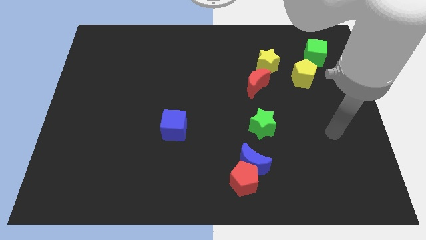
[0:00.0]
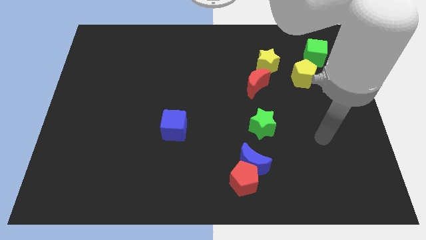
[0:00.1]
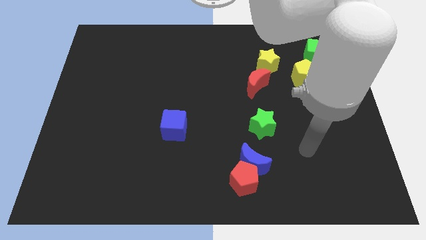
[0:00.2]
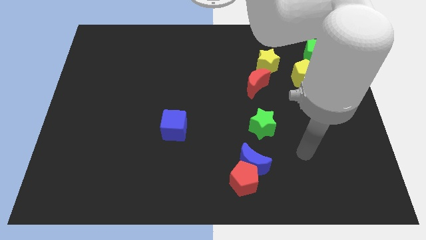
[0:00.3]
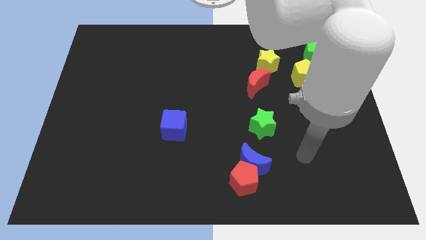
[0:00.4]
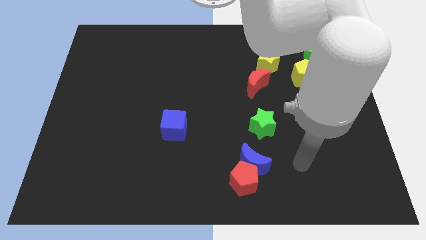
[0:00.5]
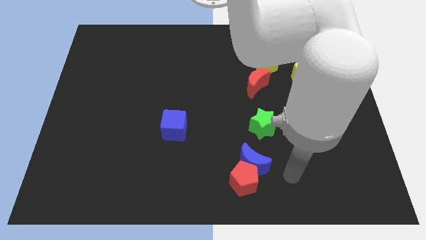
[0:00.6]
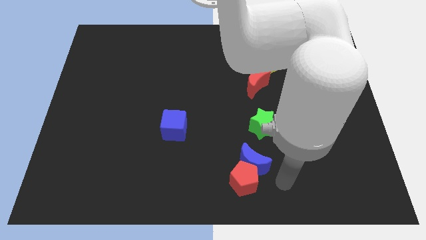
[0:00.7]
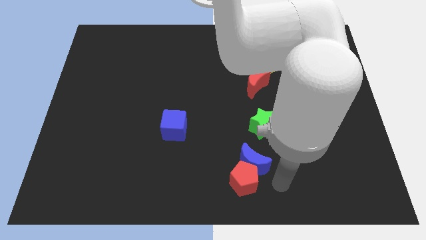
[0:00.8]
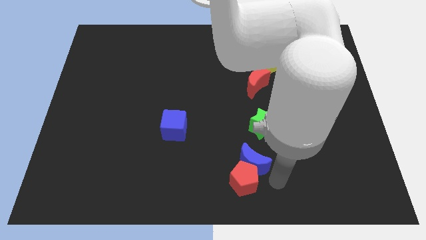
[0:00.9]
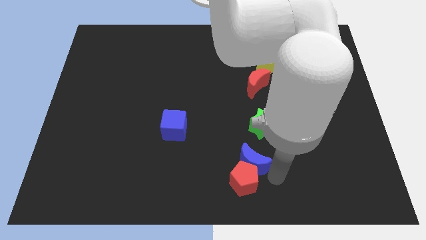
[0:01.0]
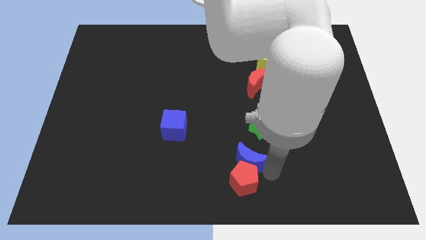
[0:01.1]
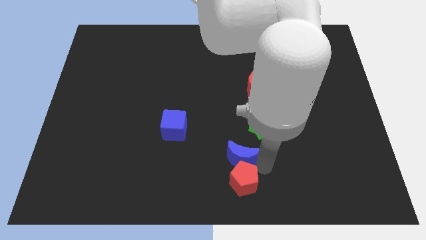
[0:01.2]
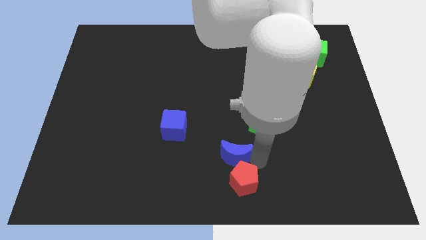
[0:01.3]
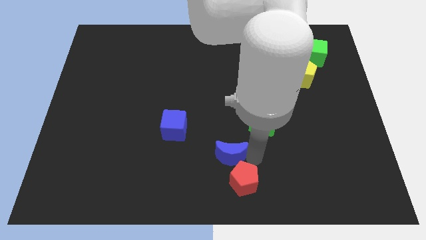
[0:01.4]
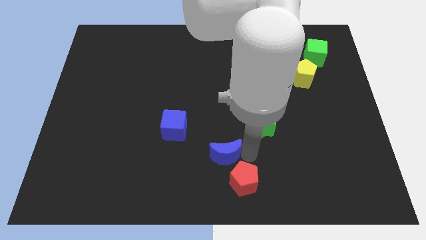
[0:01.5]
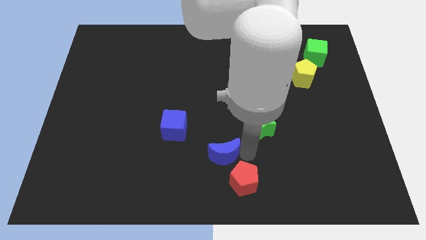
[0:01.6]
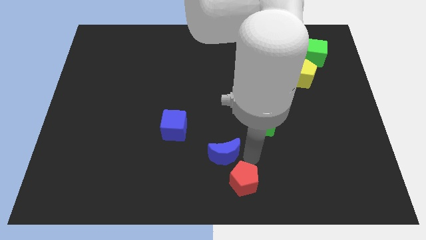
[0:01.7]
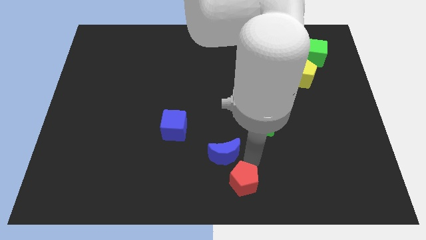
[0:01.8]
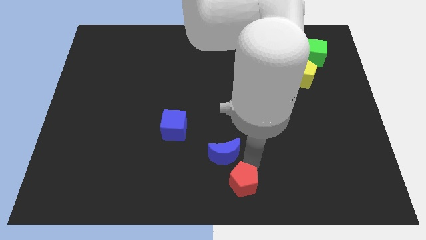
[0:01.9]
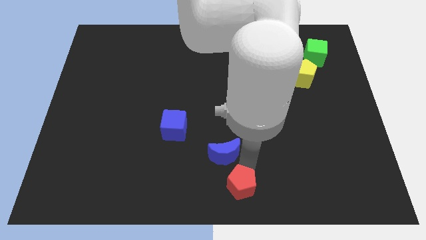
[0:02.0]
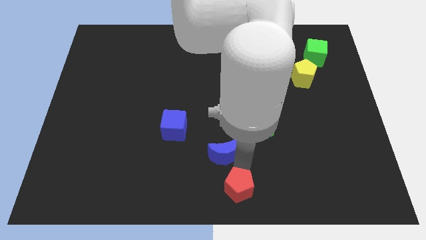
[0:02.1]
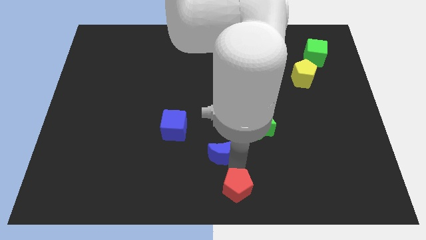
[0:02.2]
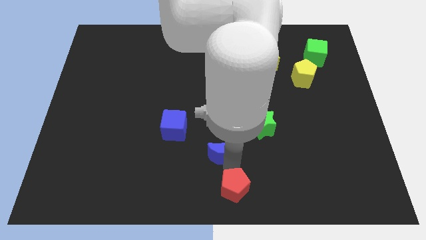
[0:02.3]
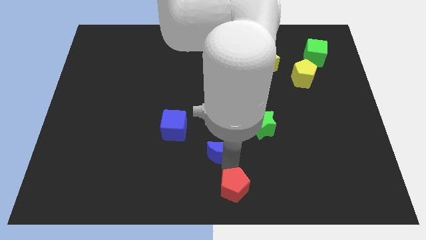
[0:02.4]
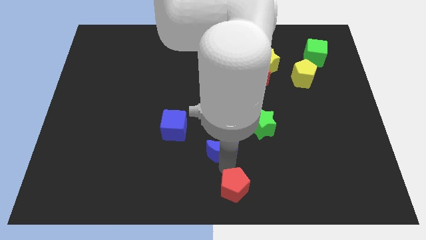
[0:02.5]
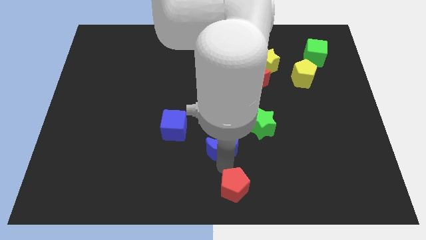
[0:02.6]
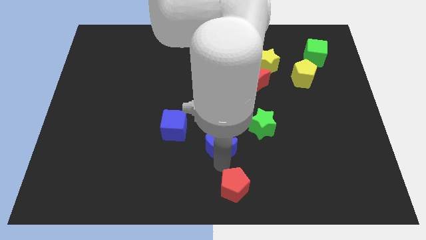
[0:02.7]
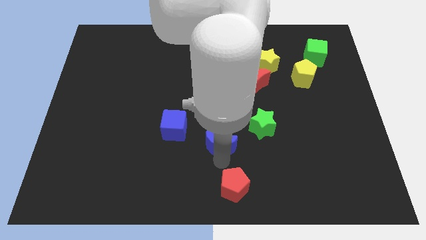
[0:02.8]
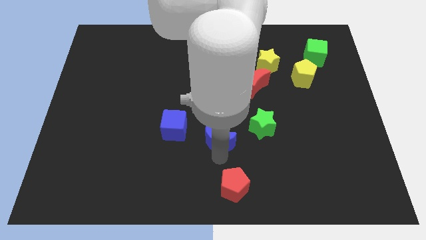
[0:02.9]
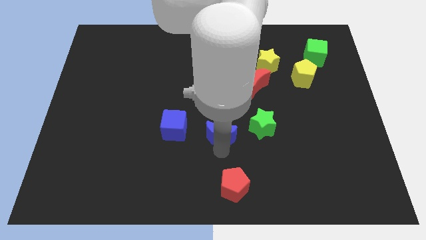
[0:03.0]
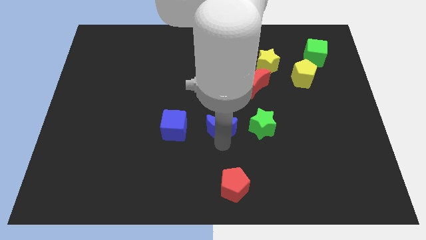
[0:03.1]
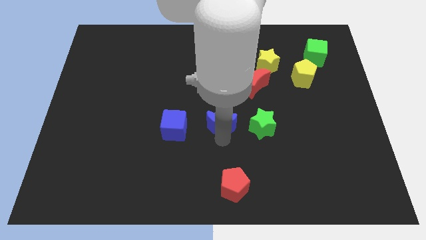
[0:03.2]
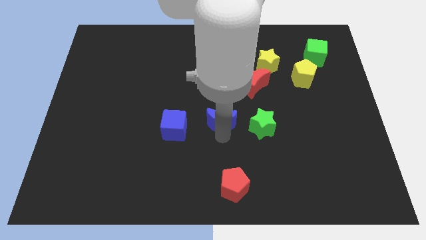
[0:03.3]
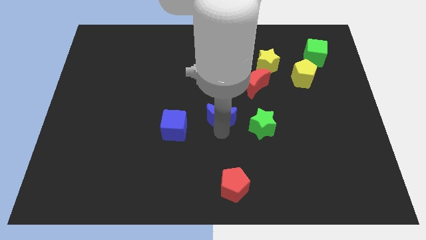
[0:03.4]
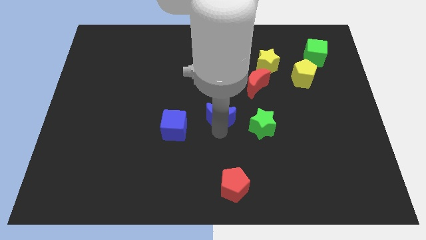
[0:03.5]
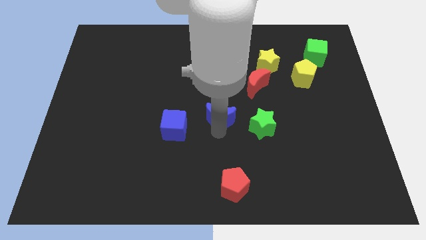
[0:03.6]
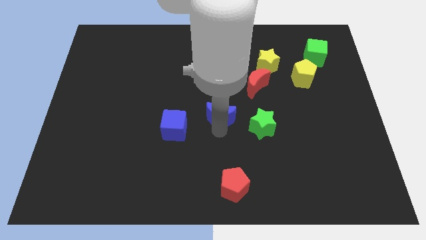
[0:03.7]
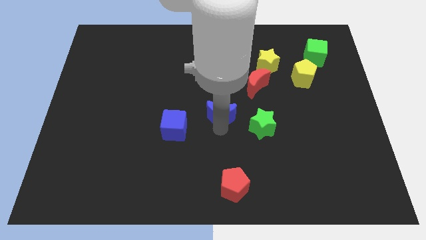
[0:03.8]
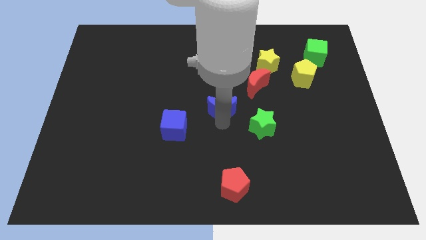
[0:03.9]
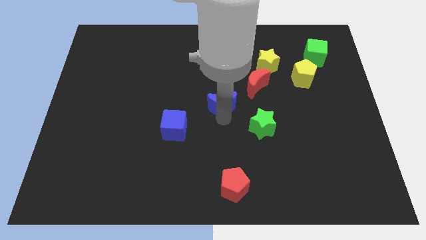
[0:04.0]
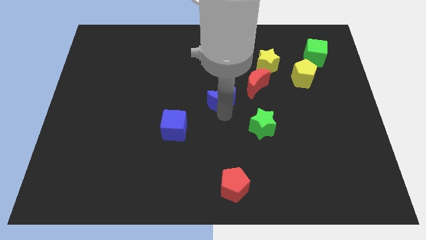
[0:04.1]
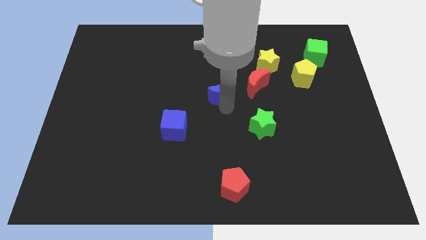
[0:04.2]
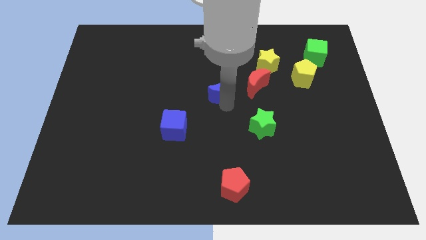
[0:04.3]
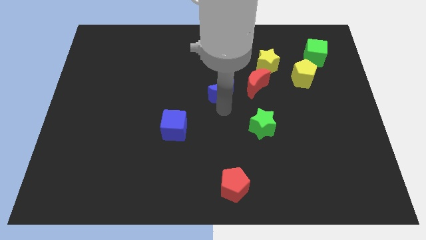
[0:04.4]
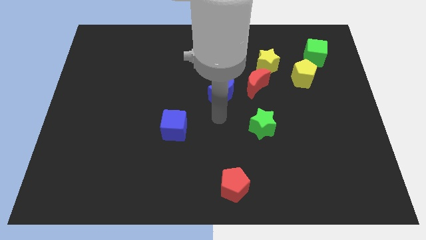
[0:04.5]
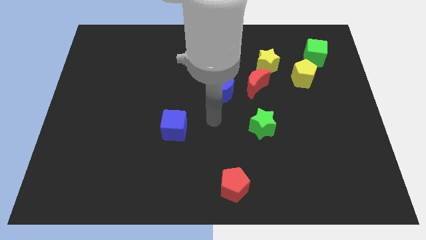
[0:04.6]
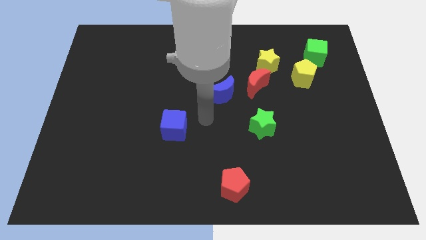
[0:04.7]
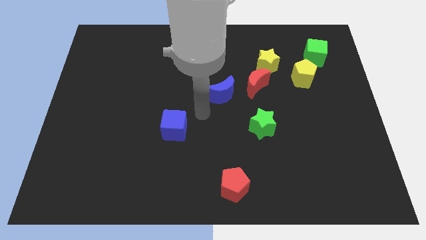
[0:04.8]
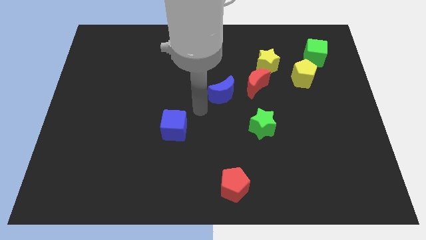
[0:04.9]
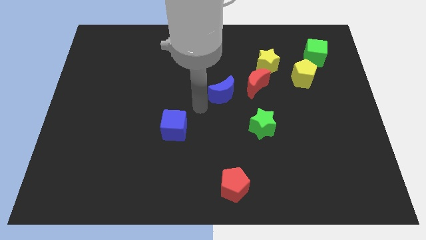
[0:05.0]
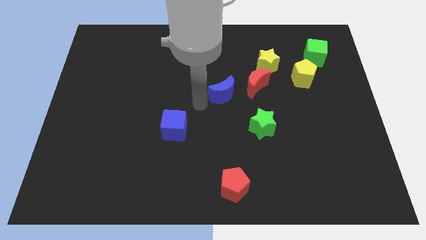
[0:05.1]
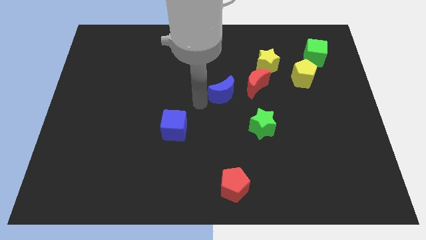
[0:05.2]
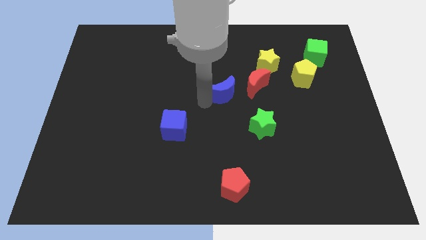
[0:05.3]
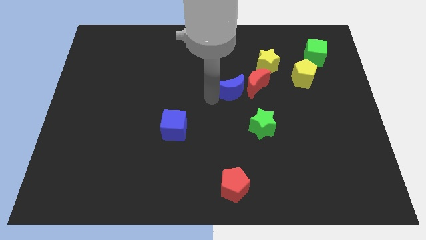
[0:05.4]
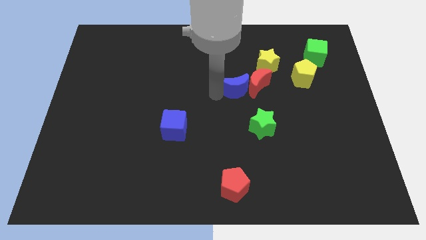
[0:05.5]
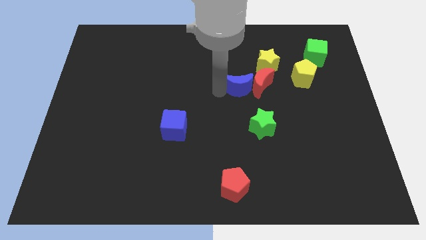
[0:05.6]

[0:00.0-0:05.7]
push the blue moon to the red moon

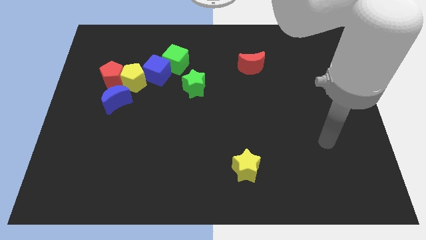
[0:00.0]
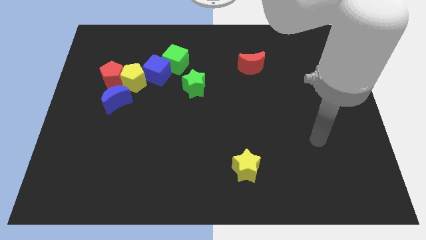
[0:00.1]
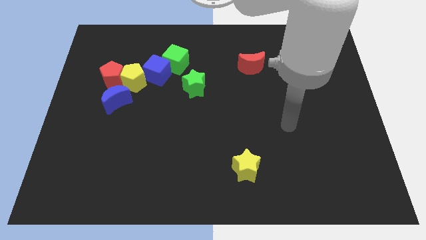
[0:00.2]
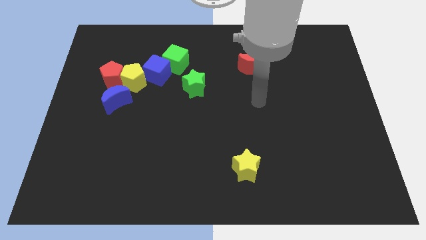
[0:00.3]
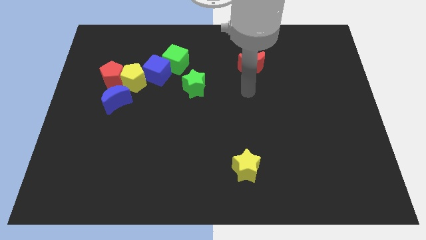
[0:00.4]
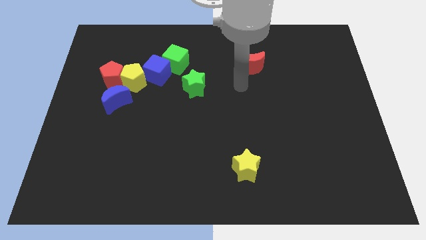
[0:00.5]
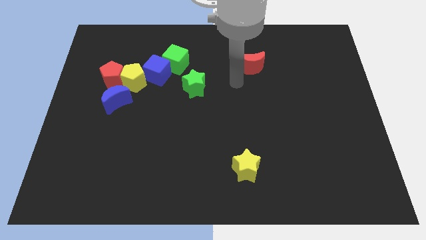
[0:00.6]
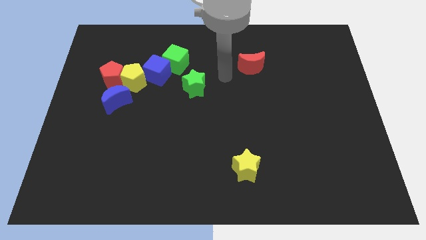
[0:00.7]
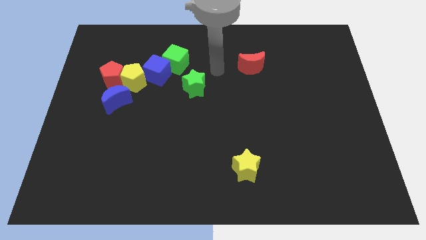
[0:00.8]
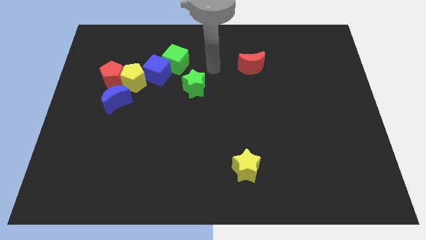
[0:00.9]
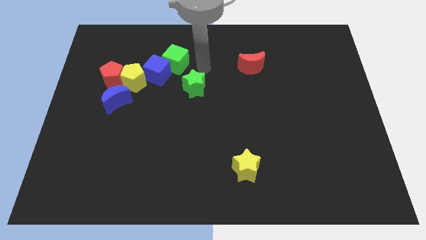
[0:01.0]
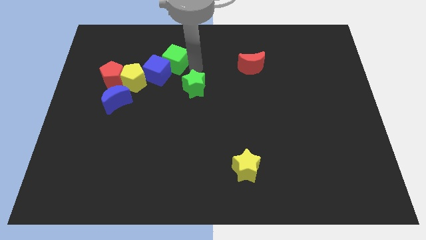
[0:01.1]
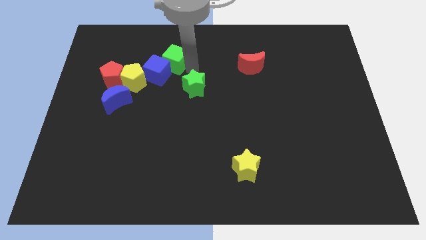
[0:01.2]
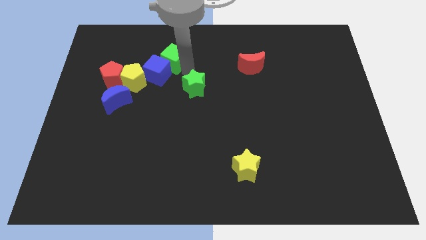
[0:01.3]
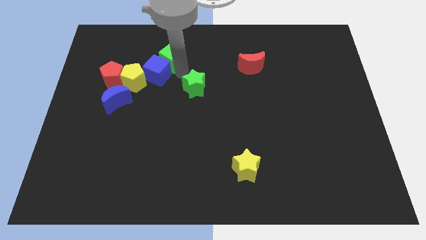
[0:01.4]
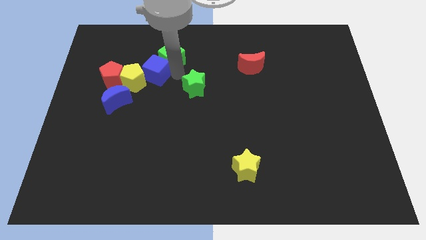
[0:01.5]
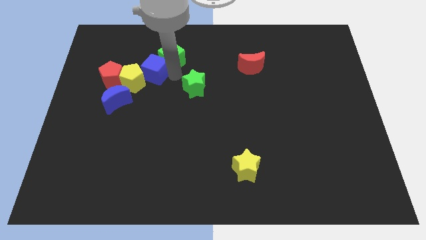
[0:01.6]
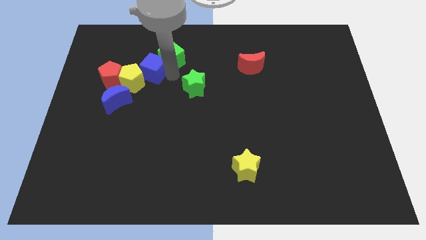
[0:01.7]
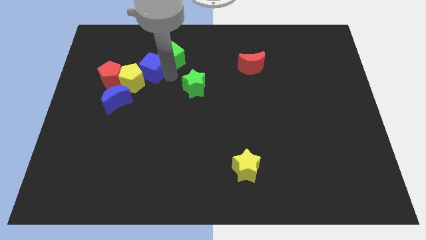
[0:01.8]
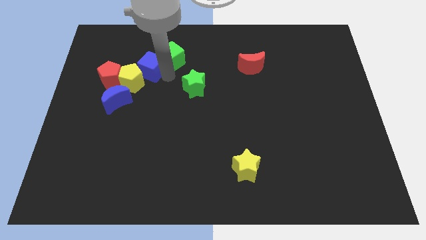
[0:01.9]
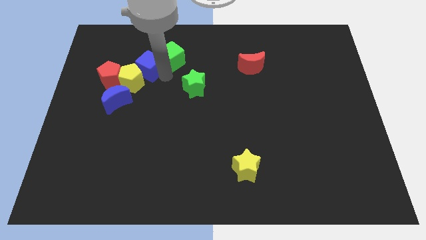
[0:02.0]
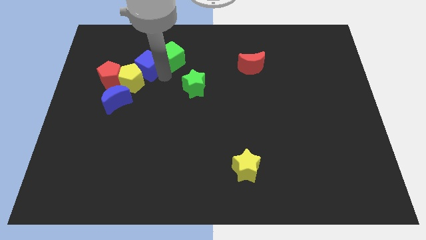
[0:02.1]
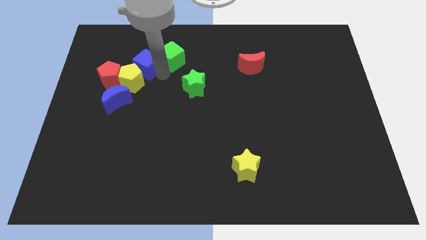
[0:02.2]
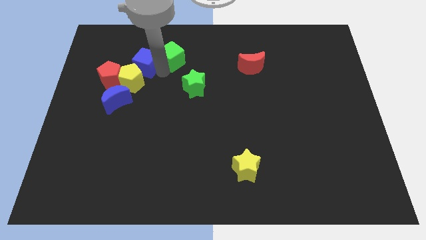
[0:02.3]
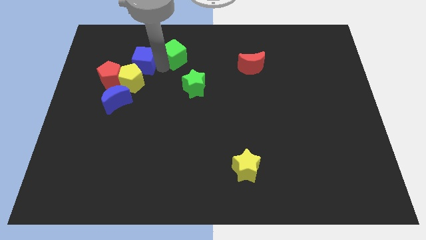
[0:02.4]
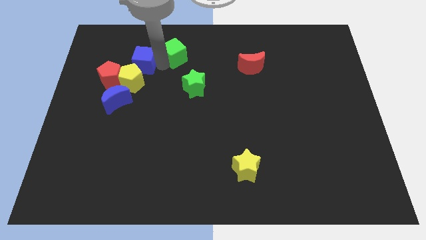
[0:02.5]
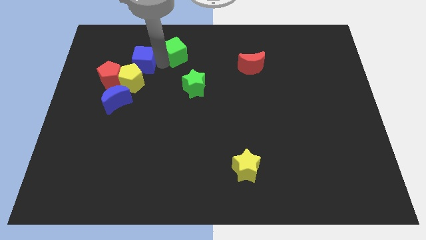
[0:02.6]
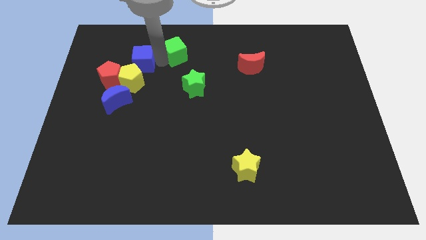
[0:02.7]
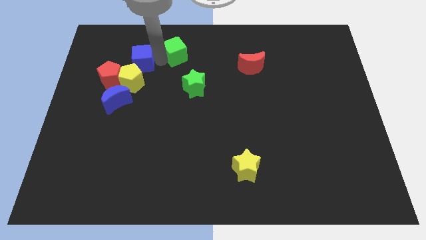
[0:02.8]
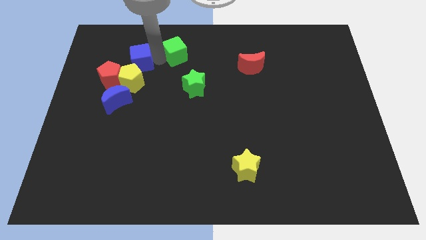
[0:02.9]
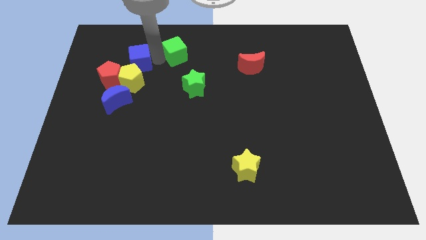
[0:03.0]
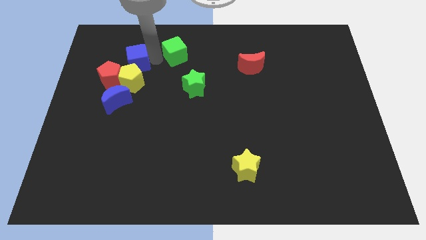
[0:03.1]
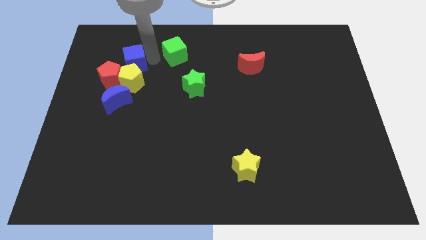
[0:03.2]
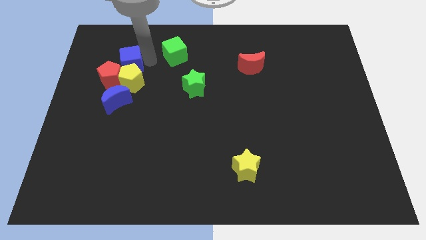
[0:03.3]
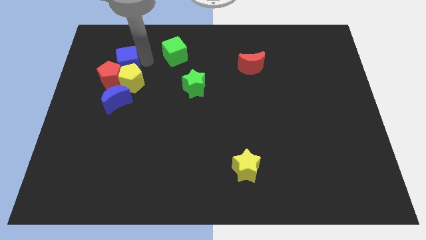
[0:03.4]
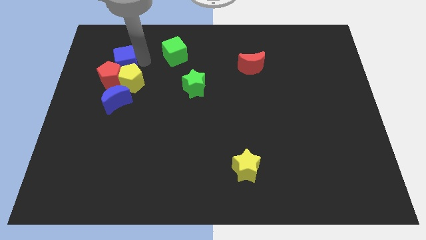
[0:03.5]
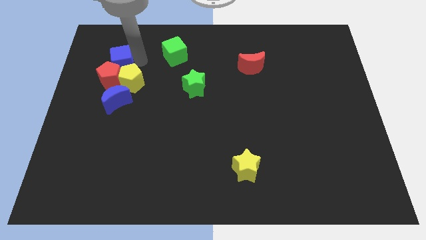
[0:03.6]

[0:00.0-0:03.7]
move the blue cube towards the red pentagon
